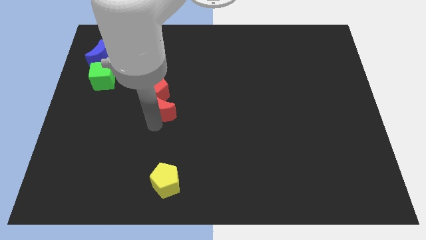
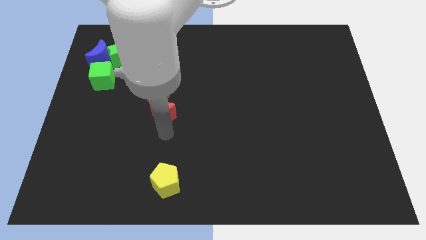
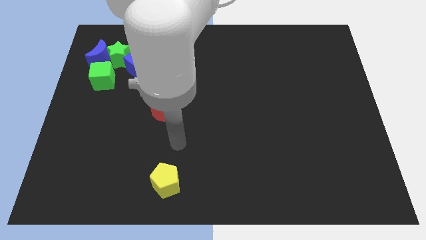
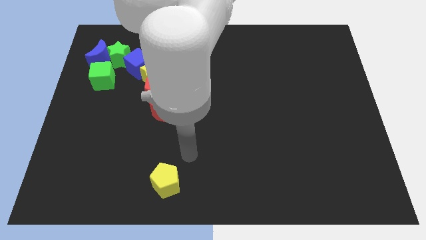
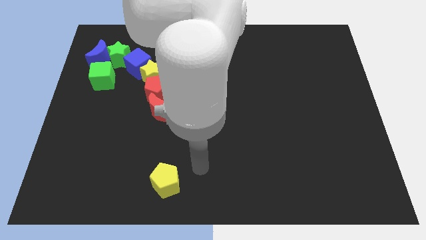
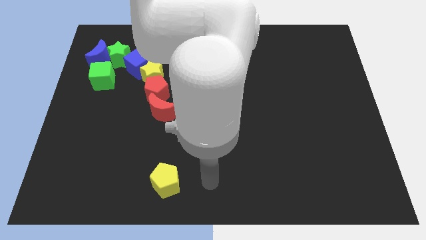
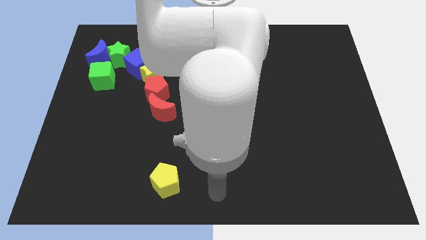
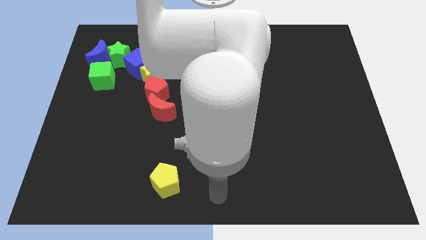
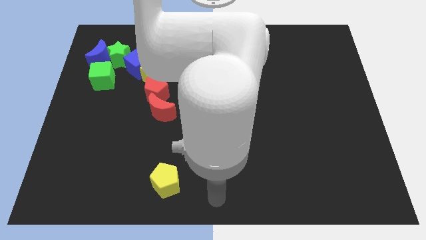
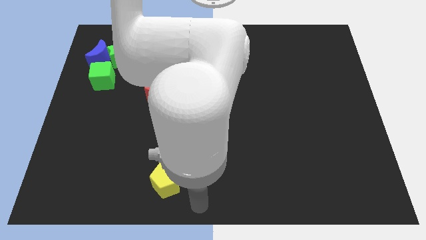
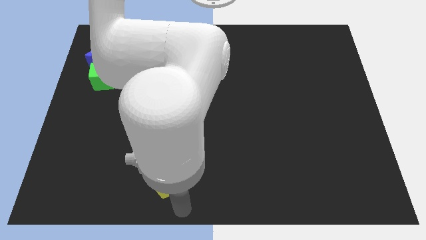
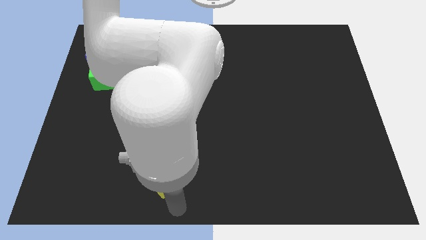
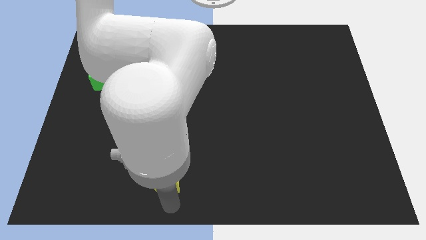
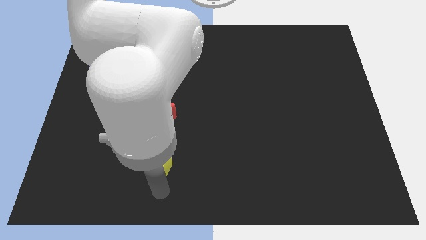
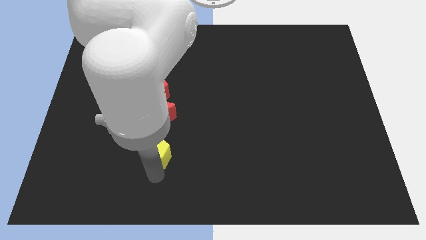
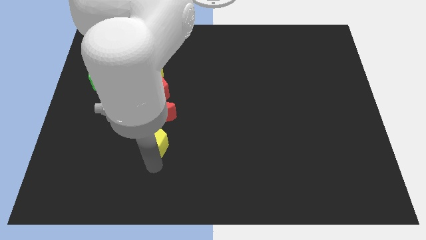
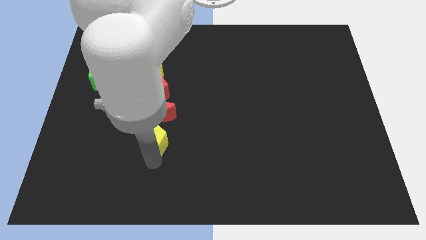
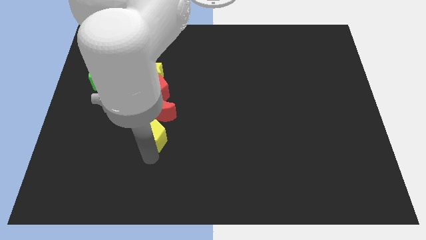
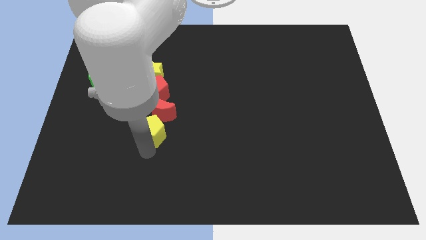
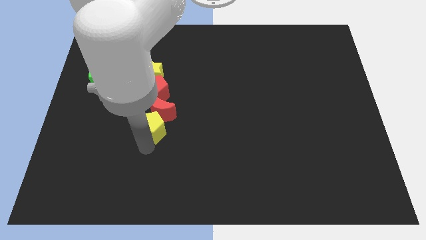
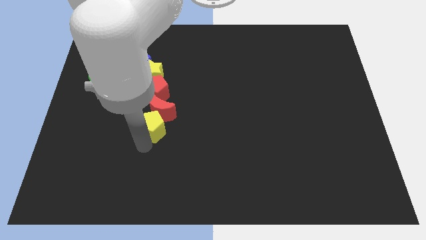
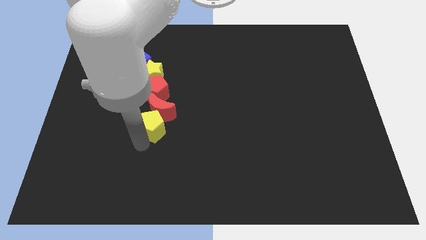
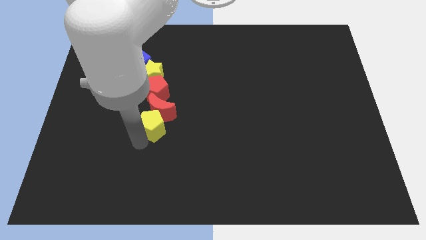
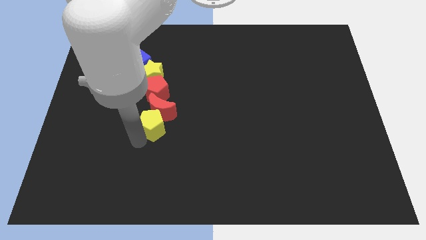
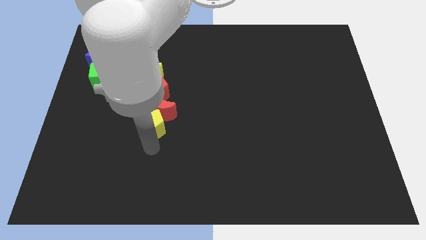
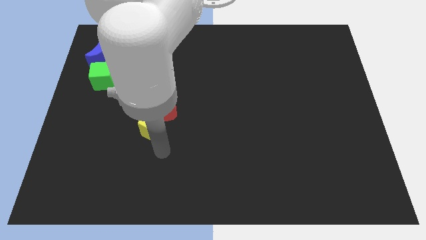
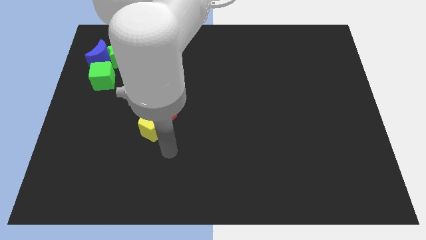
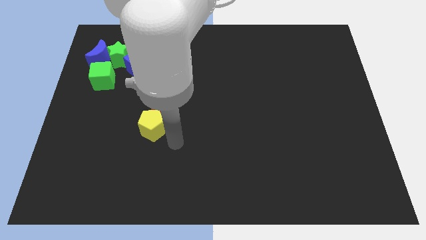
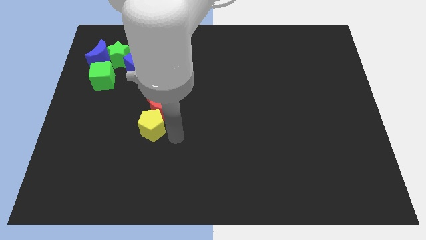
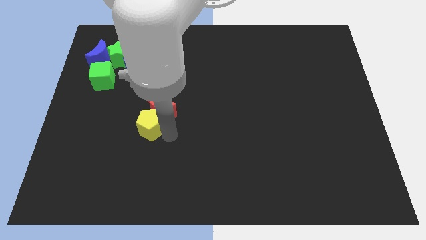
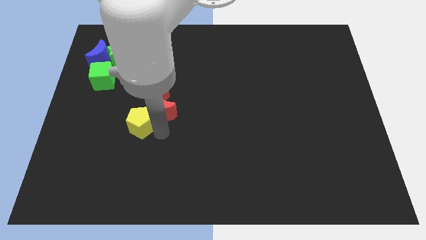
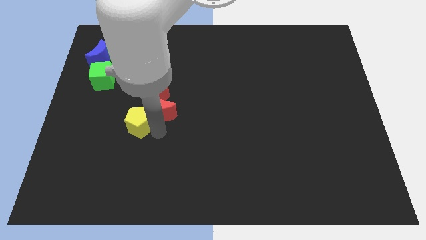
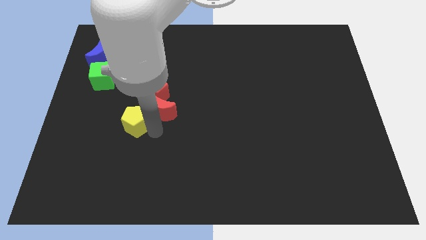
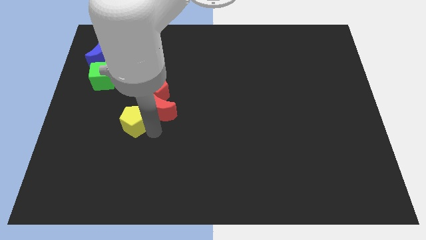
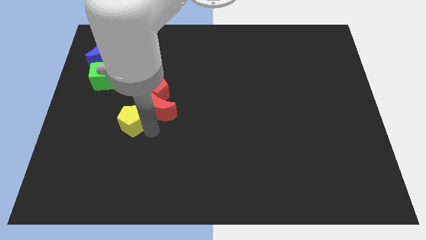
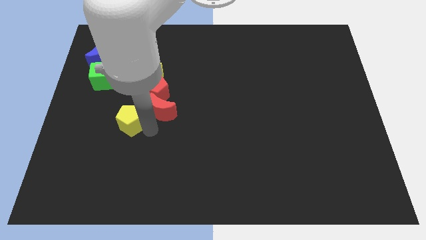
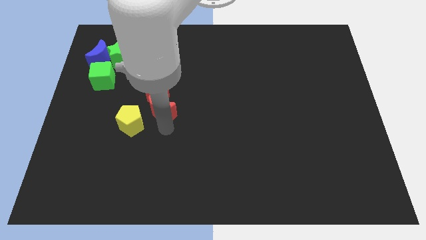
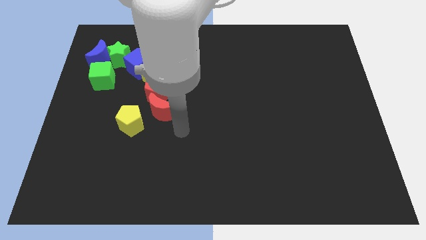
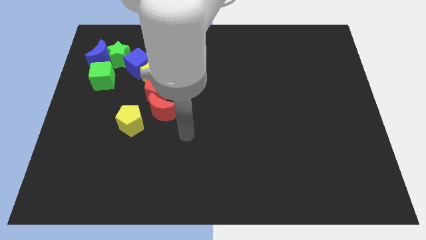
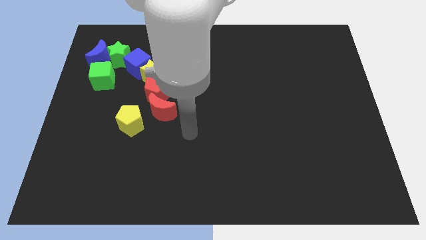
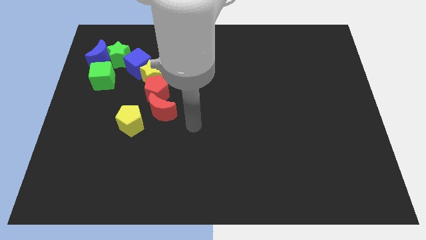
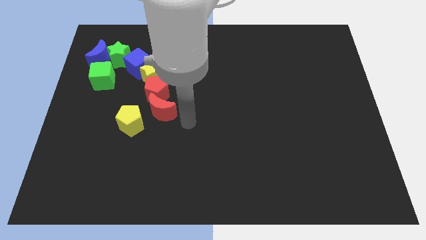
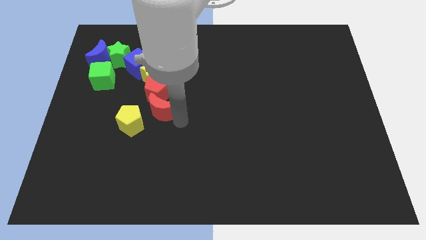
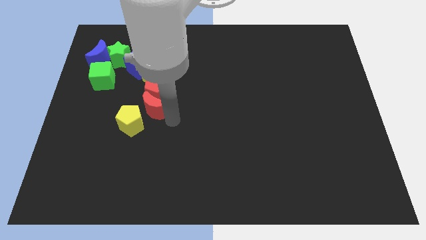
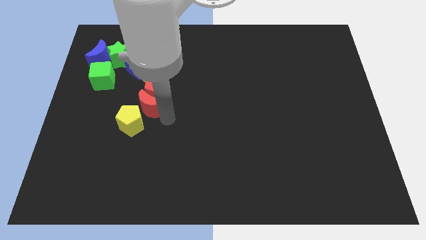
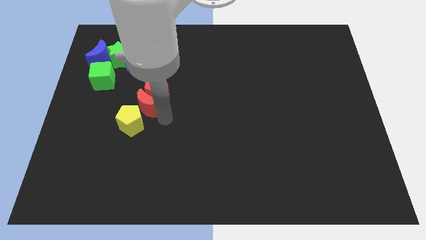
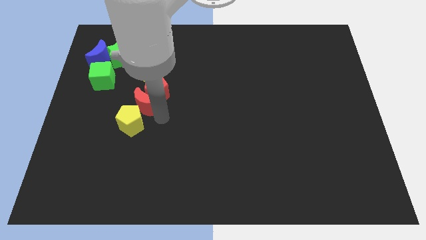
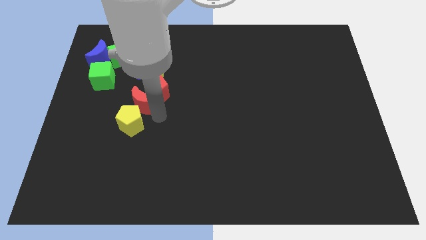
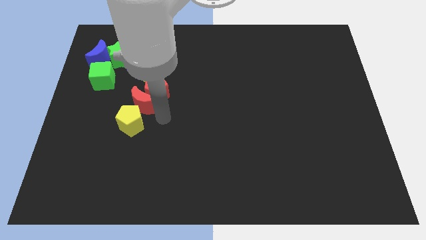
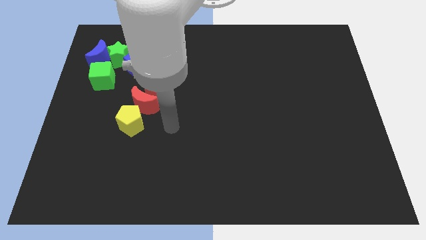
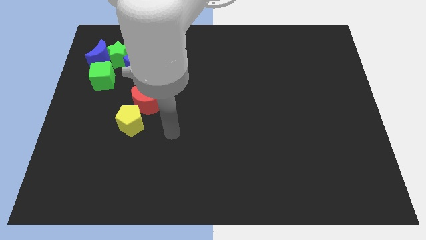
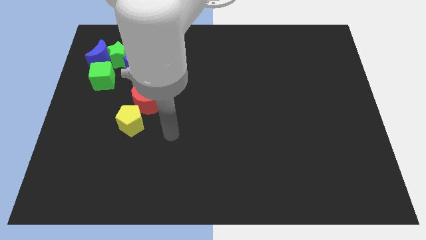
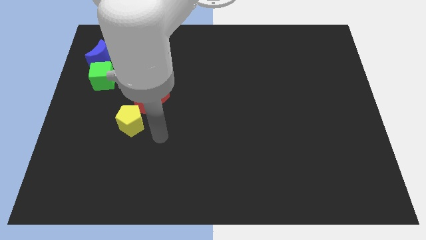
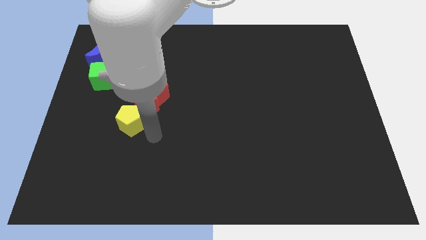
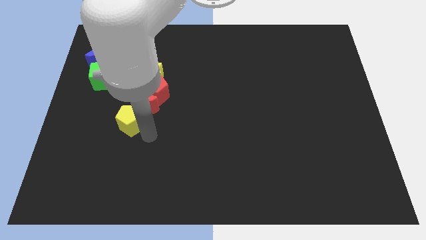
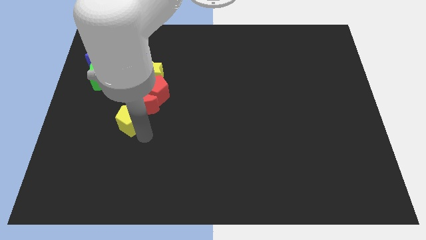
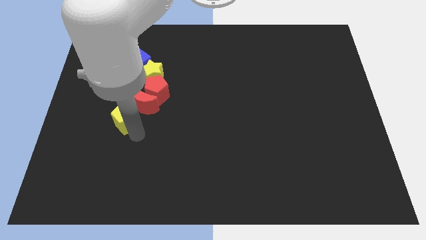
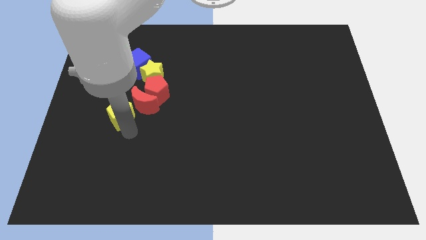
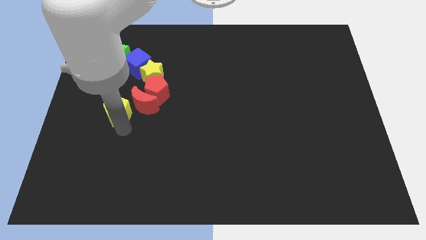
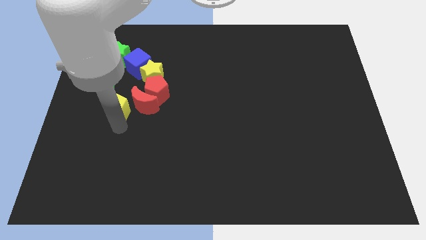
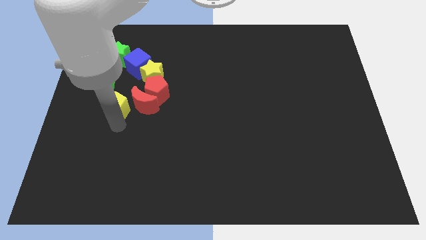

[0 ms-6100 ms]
arrange a diagonal line with the yellow pentagon red moon and red pentagon

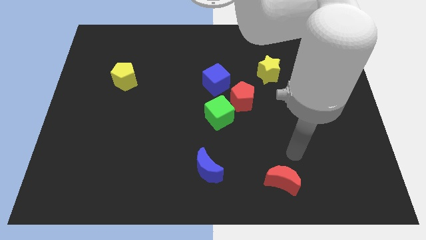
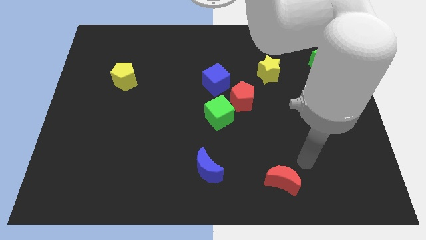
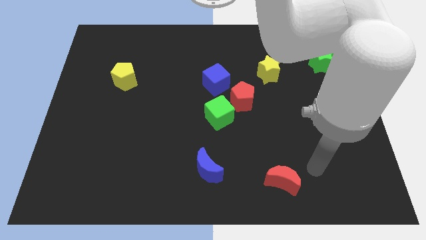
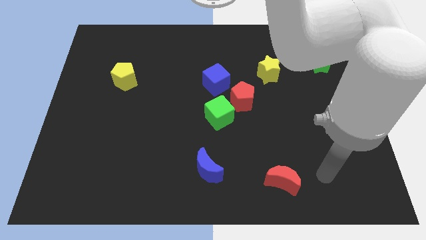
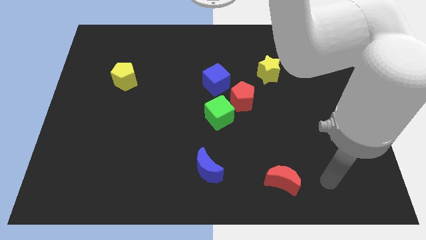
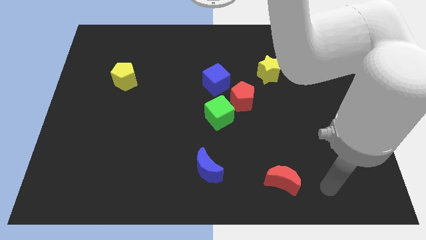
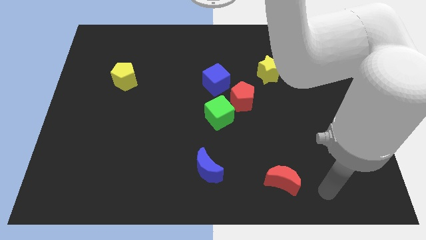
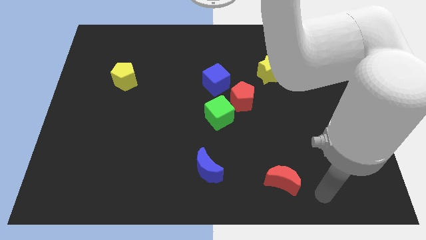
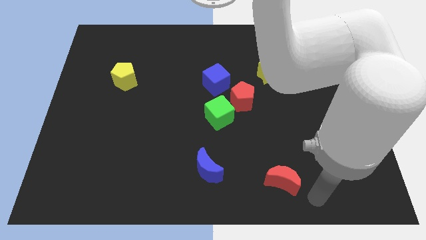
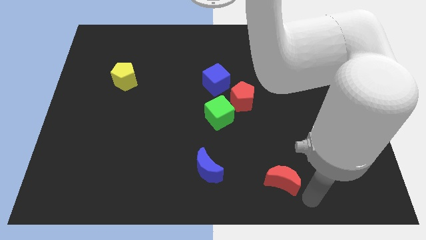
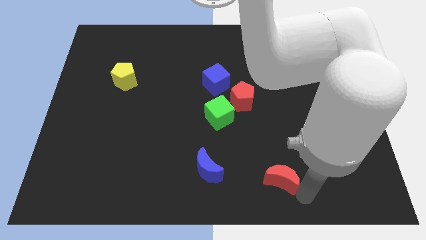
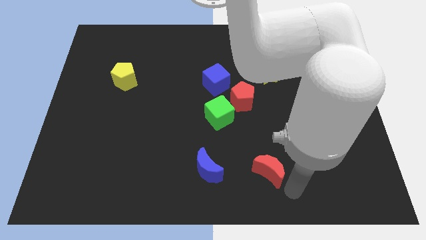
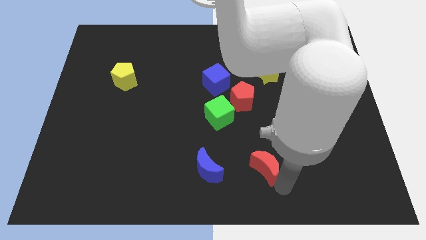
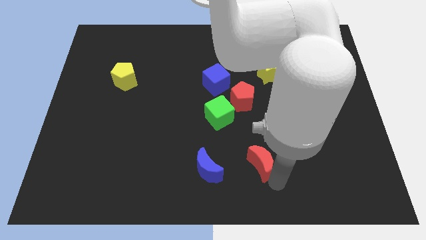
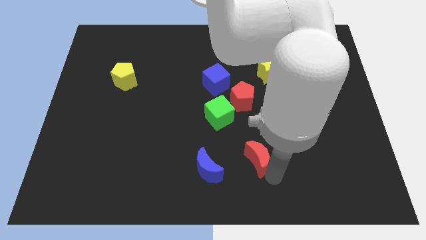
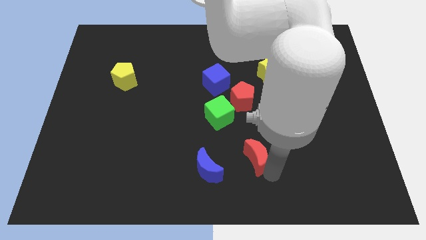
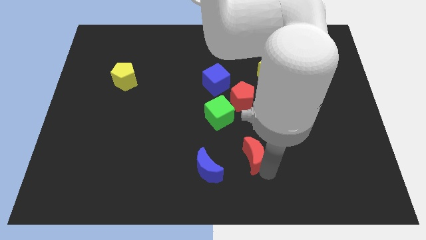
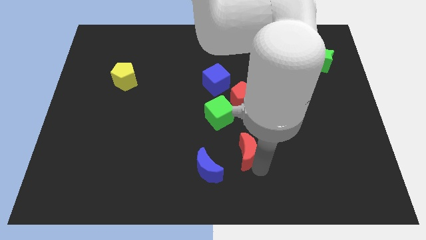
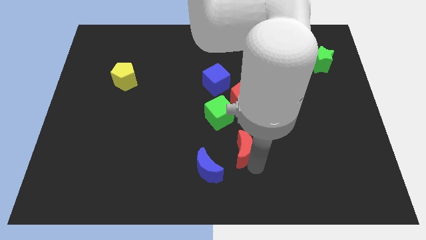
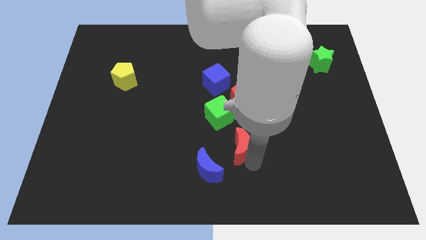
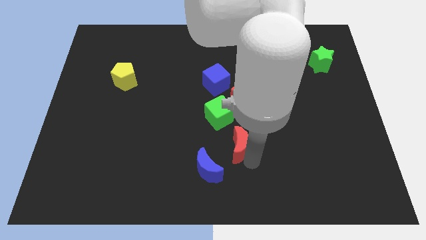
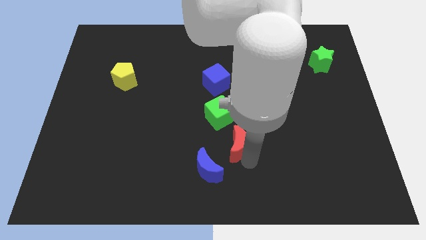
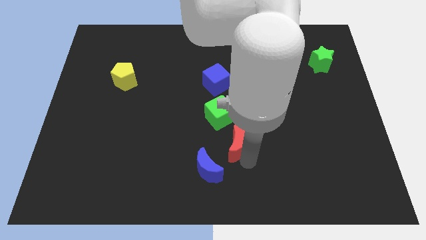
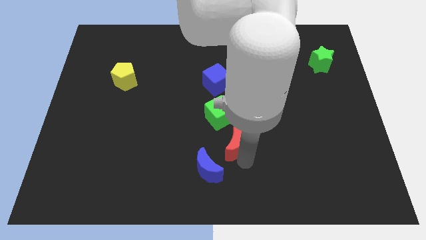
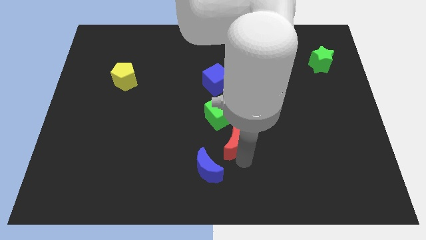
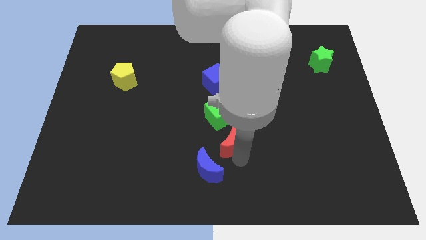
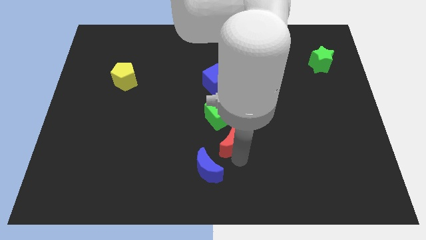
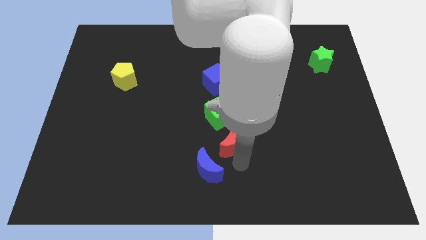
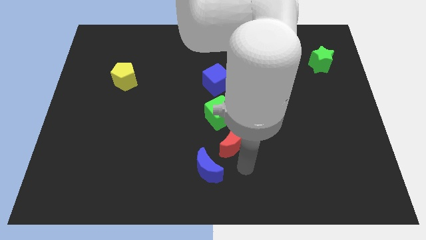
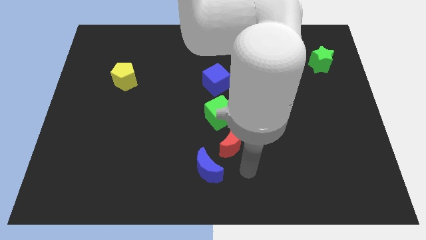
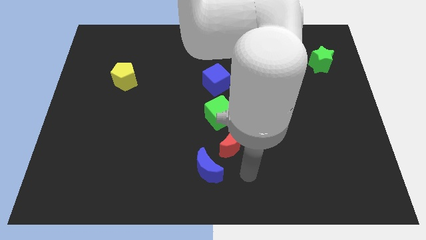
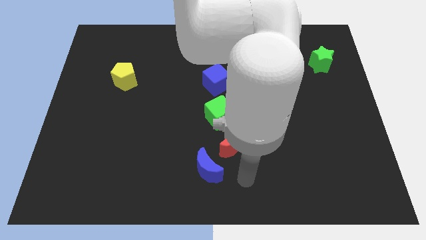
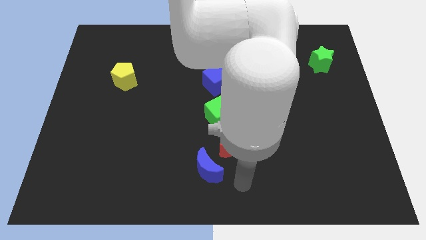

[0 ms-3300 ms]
push the red moon towards the green cube
